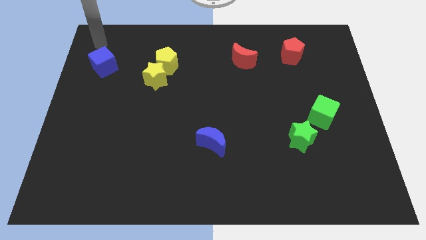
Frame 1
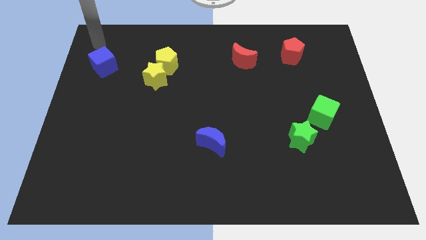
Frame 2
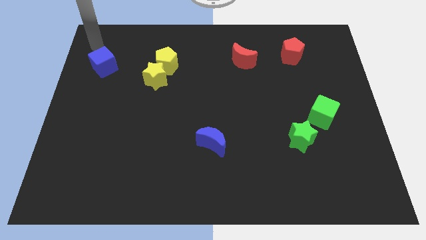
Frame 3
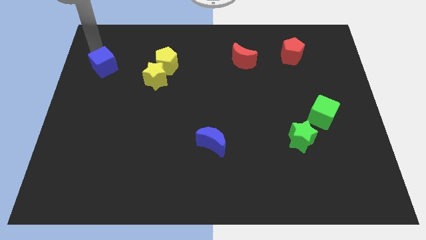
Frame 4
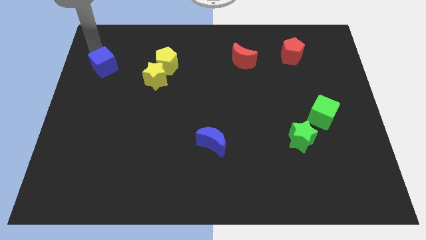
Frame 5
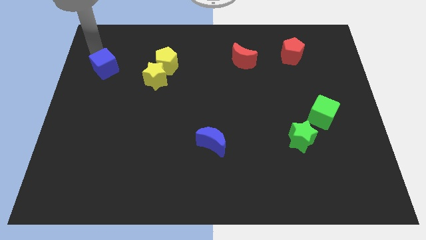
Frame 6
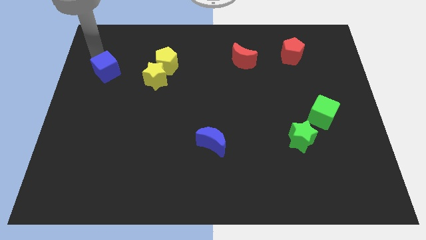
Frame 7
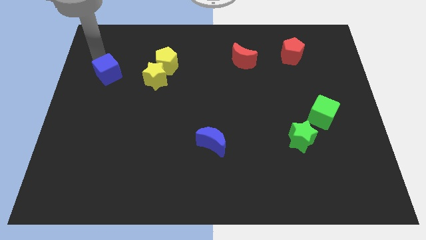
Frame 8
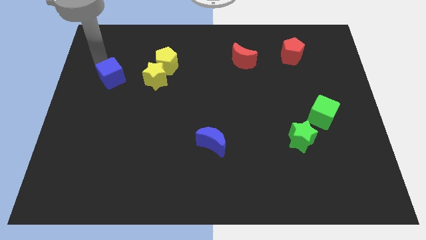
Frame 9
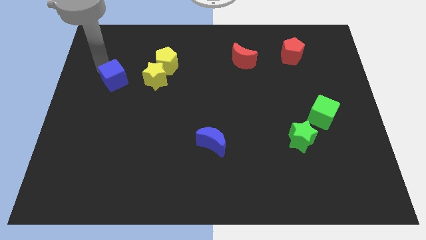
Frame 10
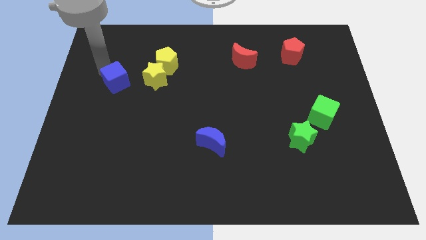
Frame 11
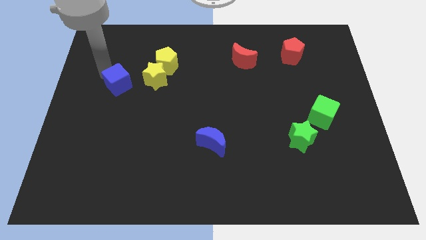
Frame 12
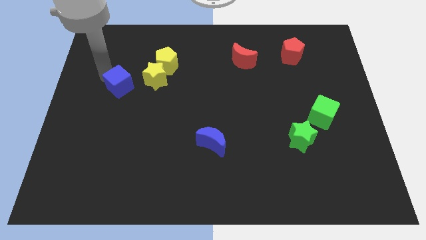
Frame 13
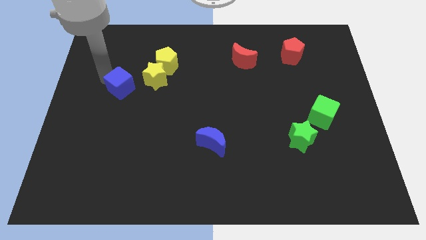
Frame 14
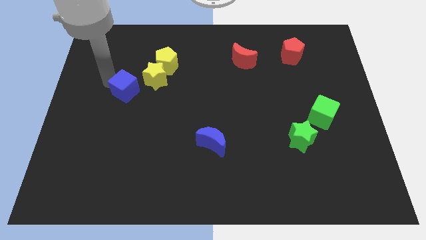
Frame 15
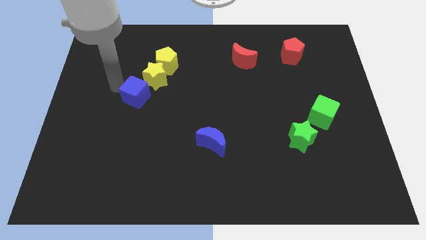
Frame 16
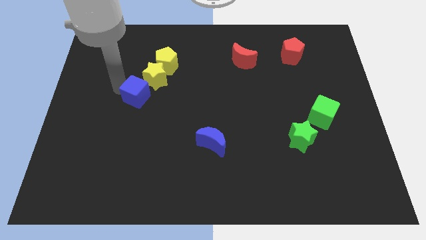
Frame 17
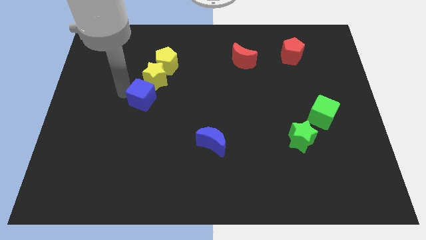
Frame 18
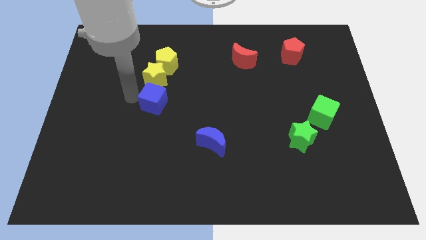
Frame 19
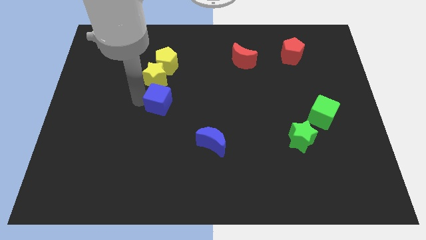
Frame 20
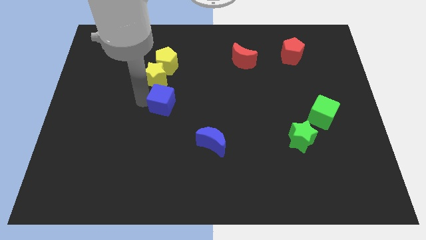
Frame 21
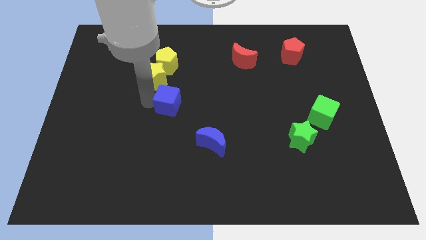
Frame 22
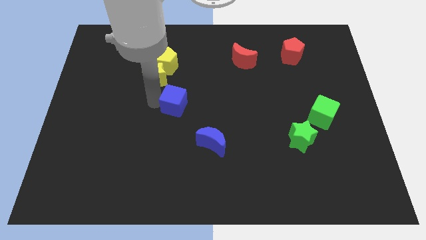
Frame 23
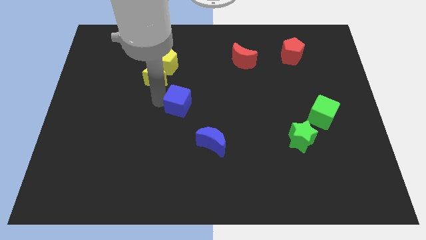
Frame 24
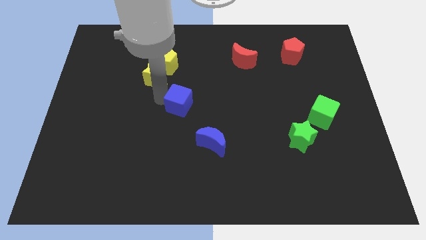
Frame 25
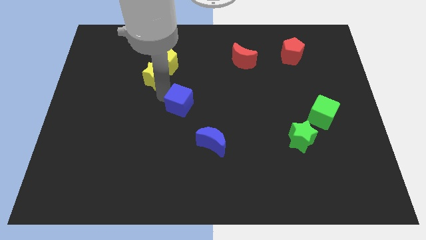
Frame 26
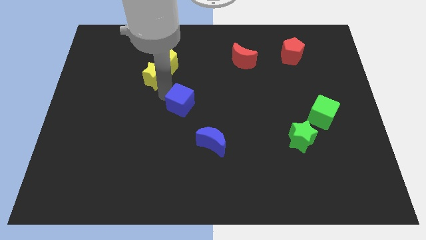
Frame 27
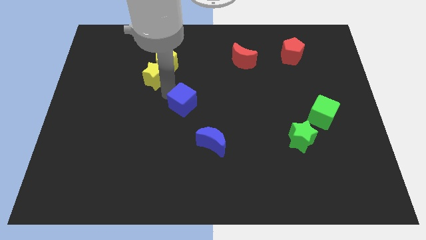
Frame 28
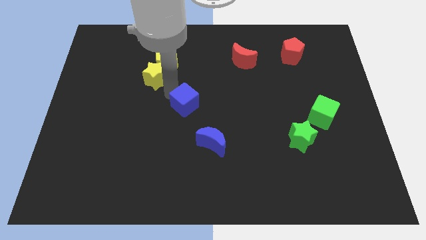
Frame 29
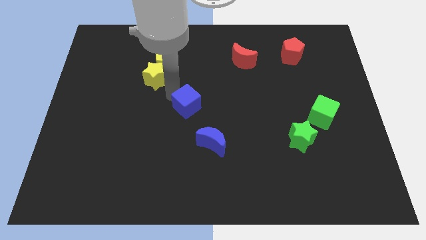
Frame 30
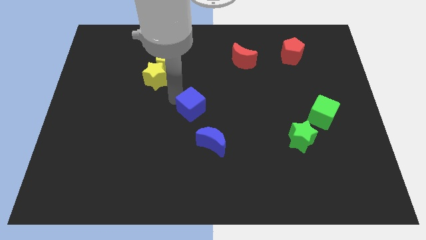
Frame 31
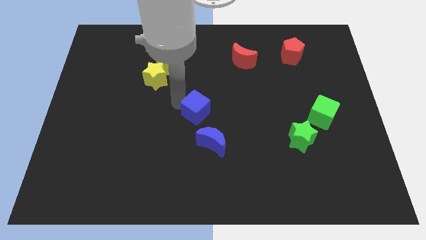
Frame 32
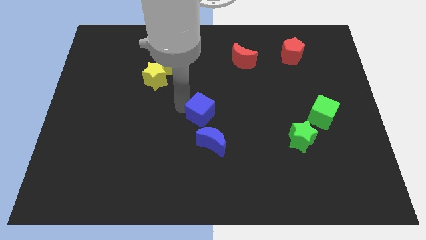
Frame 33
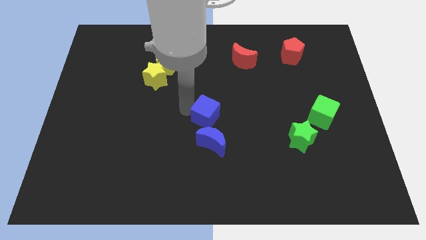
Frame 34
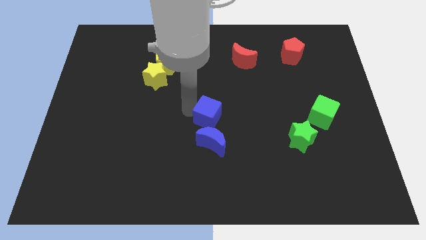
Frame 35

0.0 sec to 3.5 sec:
move the blue cube top of the blue crescent

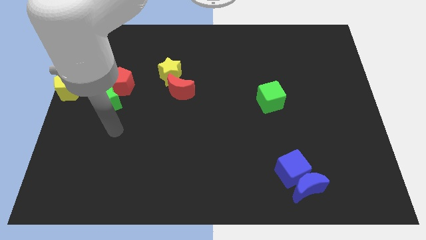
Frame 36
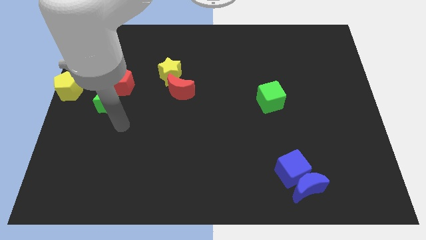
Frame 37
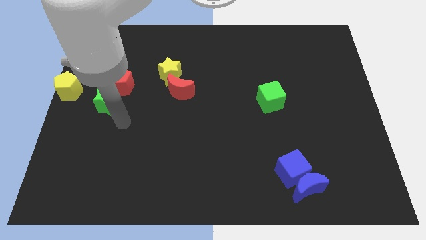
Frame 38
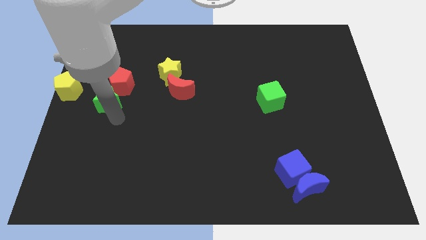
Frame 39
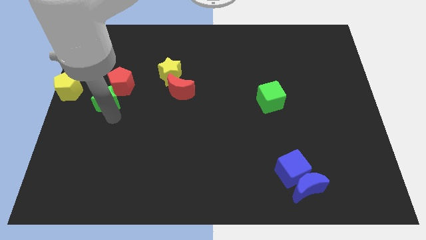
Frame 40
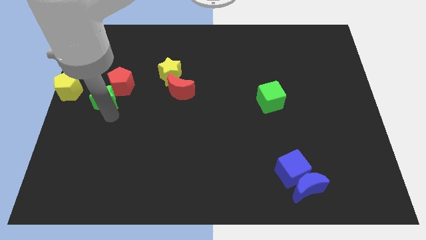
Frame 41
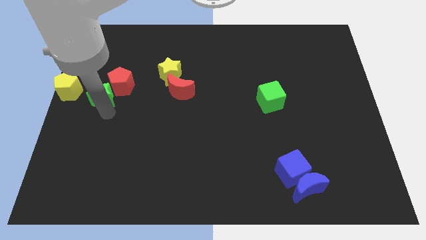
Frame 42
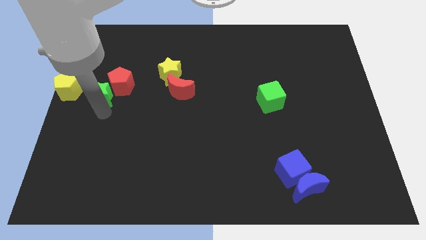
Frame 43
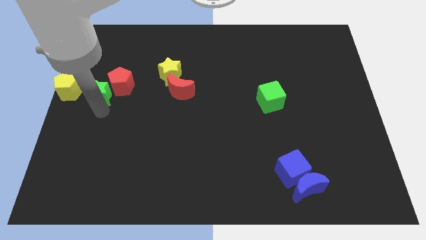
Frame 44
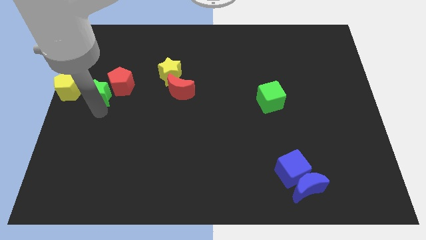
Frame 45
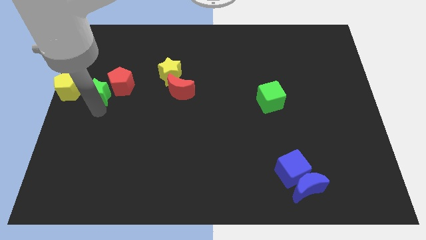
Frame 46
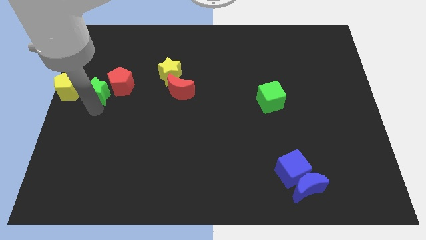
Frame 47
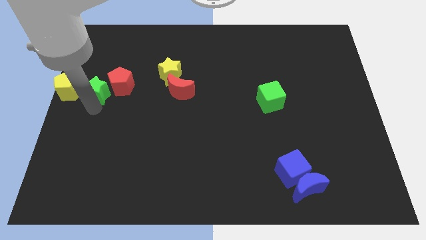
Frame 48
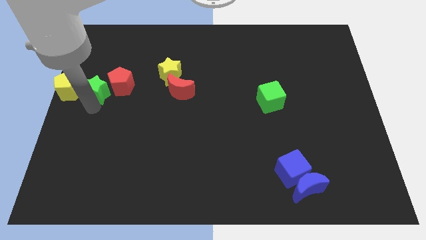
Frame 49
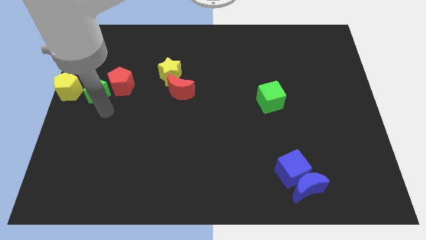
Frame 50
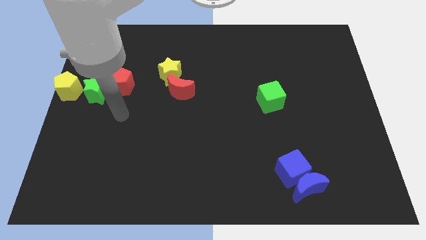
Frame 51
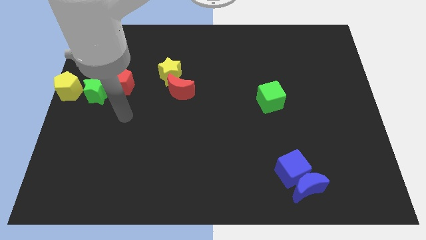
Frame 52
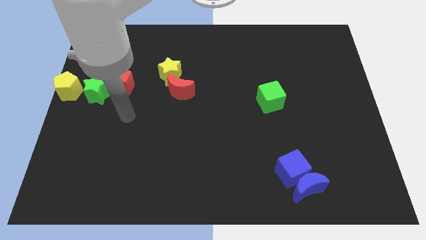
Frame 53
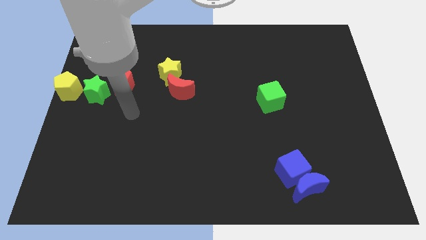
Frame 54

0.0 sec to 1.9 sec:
move the green star in between the yellow pentagon and red pentagon

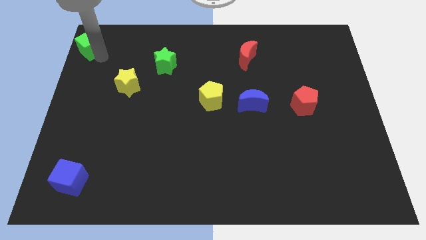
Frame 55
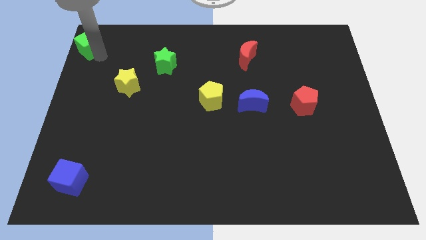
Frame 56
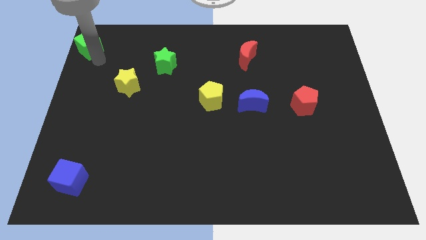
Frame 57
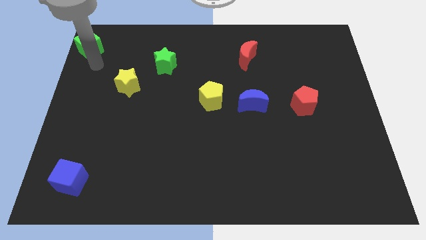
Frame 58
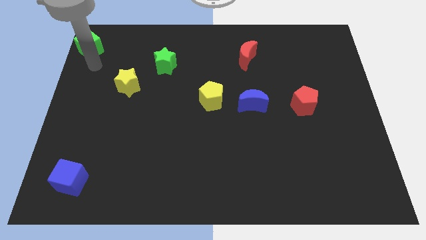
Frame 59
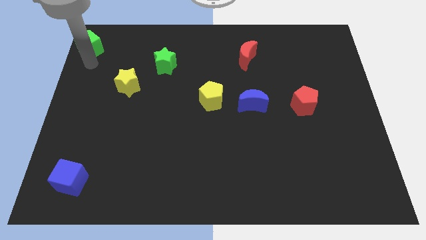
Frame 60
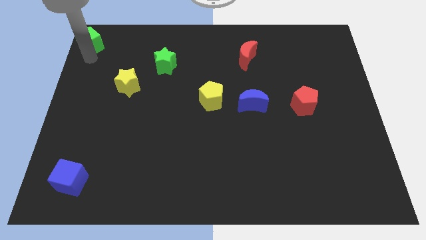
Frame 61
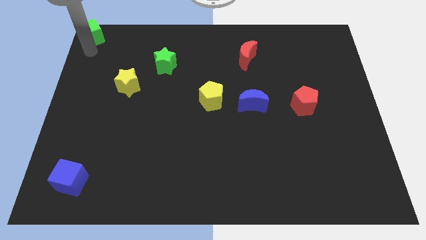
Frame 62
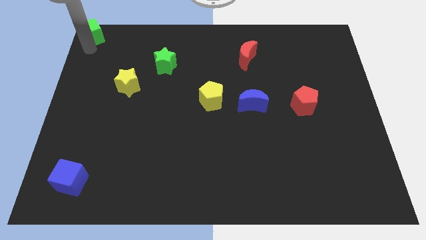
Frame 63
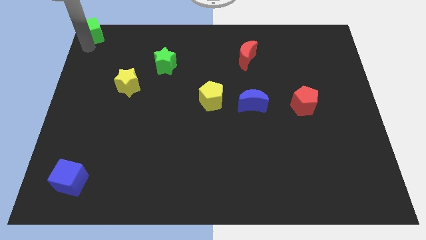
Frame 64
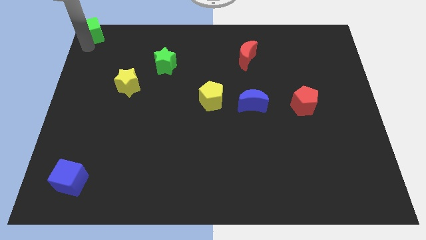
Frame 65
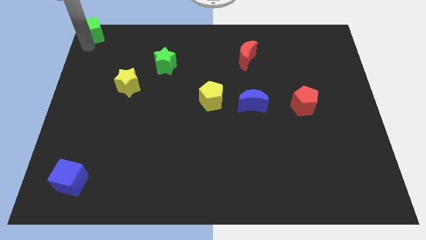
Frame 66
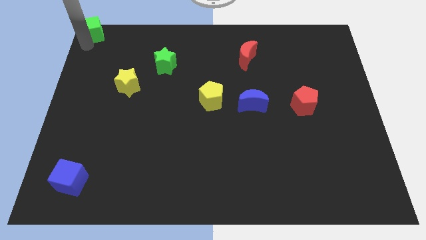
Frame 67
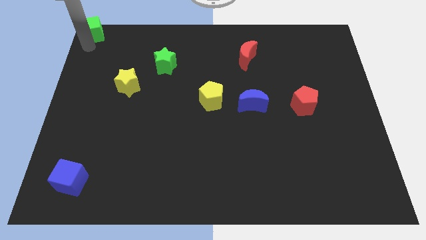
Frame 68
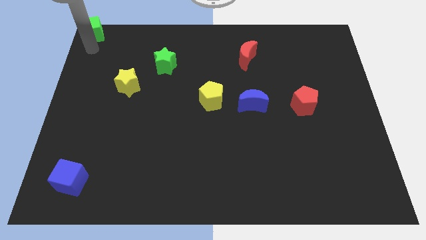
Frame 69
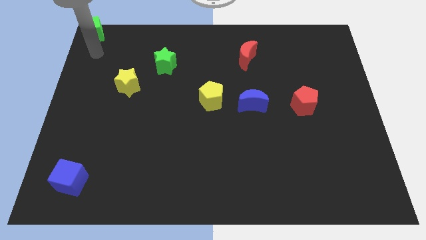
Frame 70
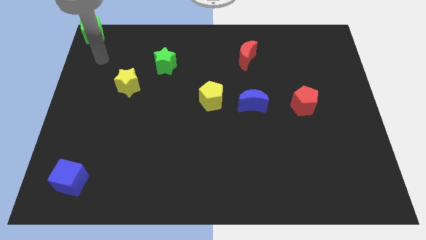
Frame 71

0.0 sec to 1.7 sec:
move the green cube to the top left of the board

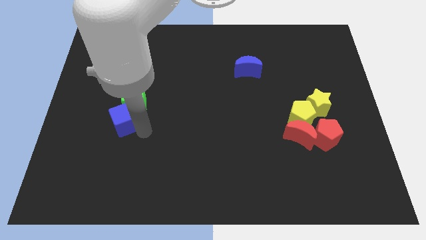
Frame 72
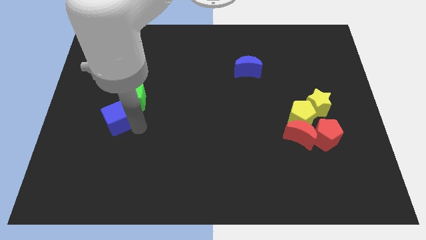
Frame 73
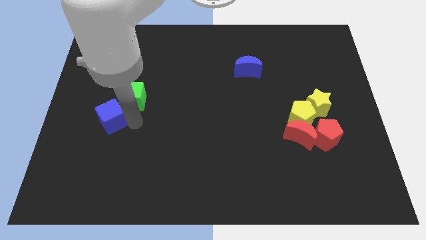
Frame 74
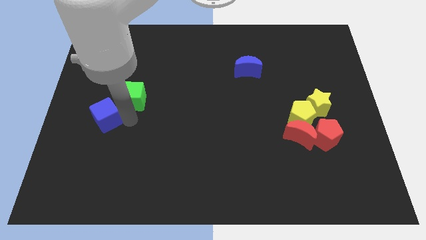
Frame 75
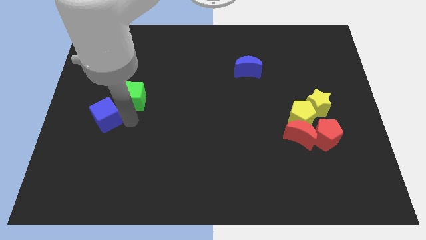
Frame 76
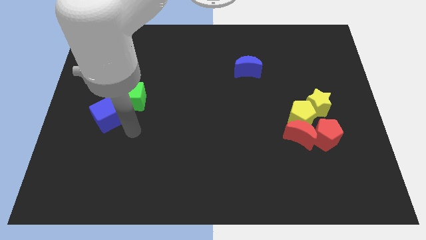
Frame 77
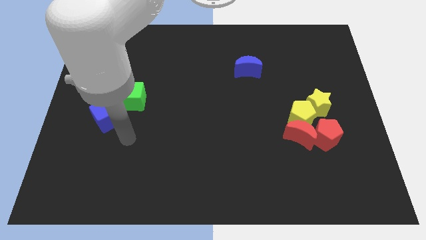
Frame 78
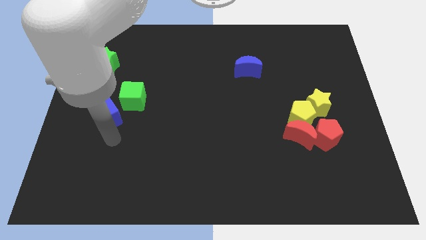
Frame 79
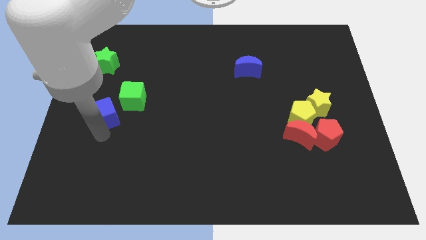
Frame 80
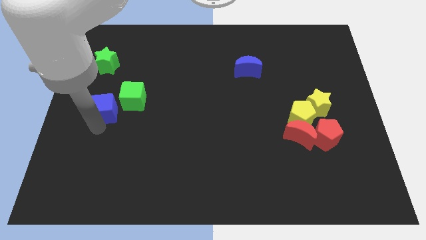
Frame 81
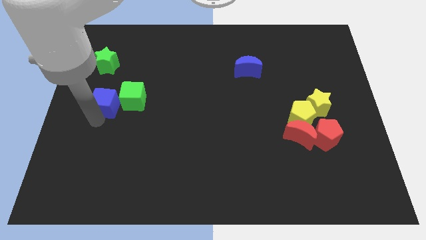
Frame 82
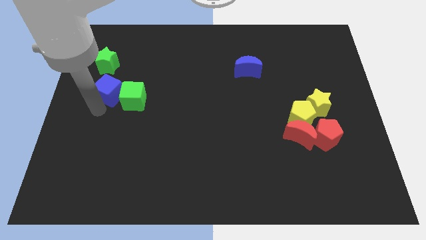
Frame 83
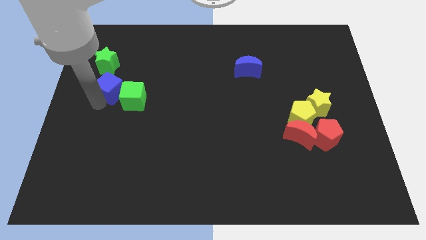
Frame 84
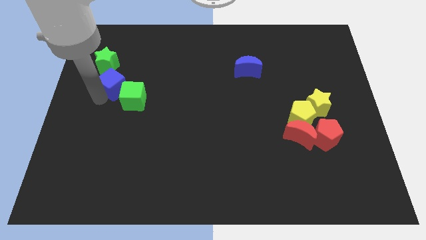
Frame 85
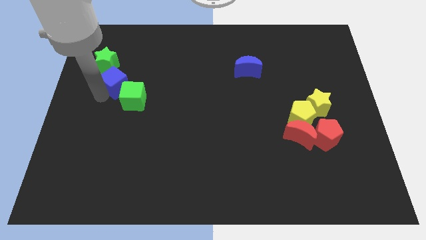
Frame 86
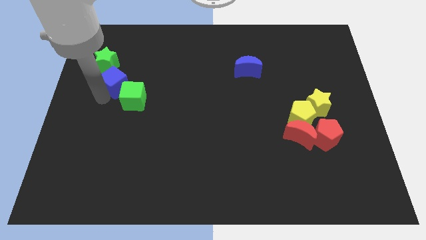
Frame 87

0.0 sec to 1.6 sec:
move the blue cube to the bottom right of the green star
